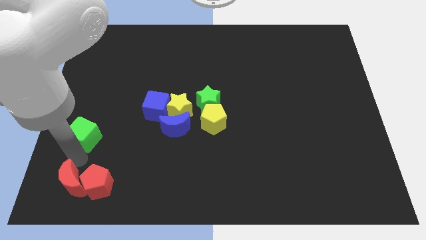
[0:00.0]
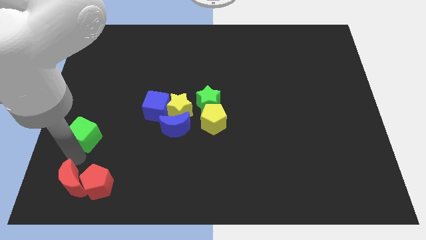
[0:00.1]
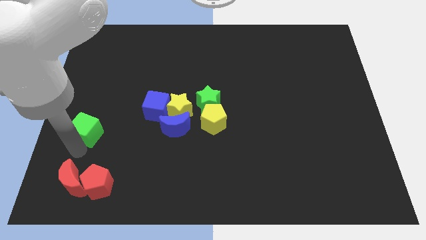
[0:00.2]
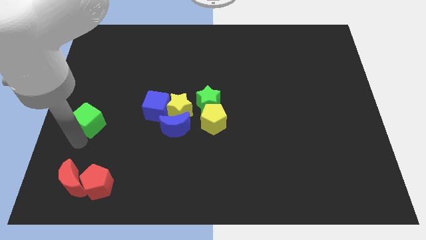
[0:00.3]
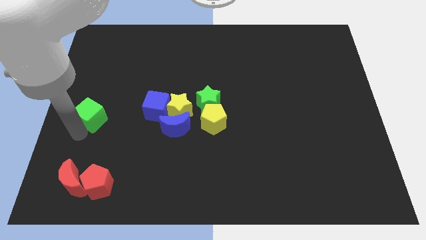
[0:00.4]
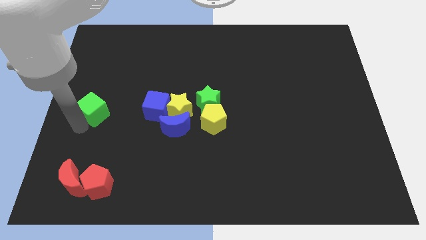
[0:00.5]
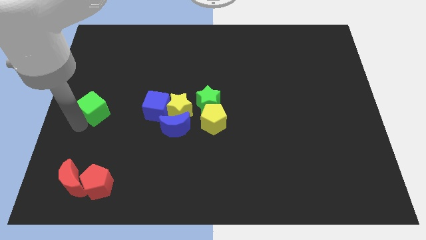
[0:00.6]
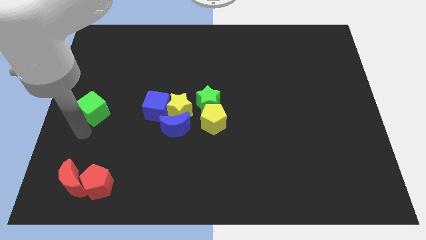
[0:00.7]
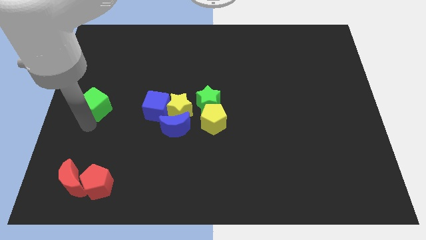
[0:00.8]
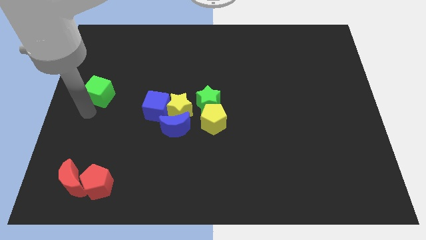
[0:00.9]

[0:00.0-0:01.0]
push the green cube left center of the board

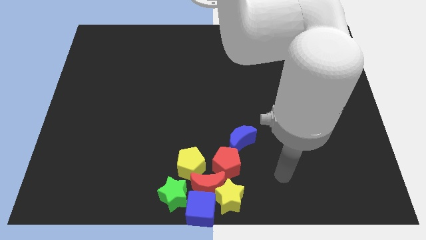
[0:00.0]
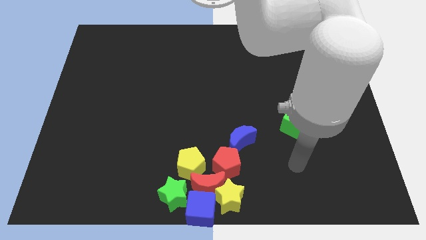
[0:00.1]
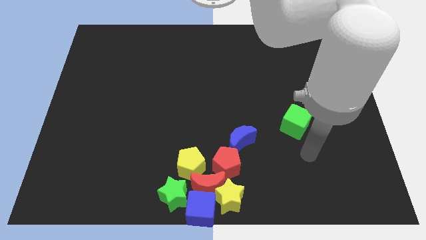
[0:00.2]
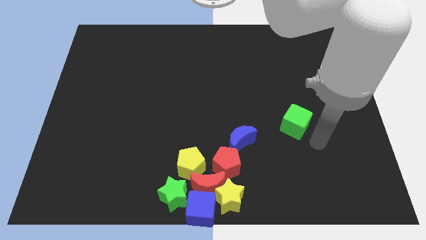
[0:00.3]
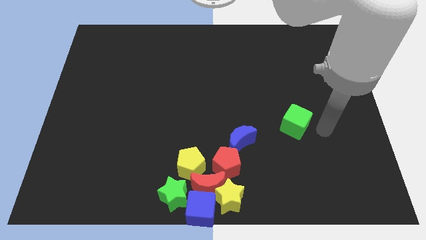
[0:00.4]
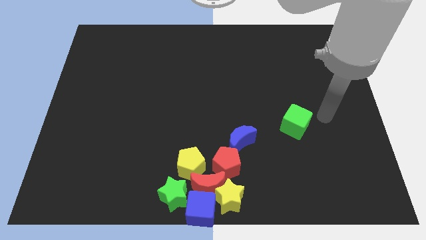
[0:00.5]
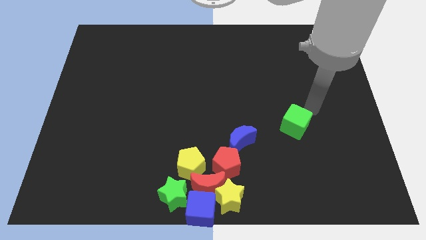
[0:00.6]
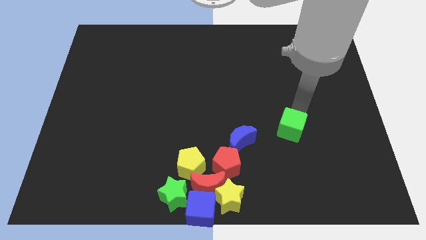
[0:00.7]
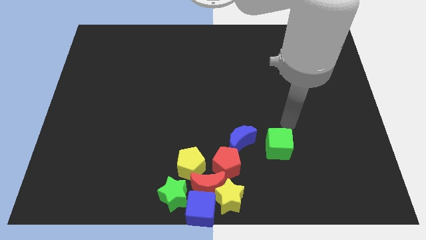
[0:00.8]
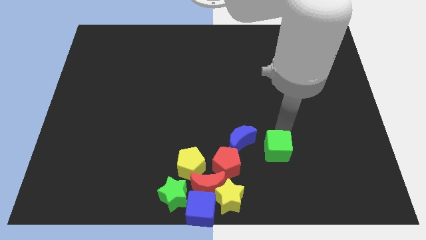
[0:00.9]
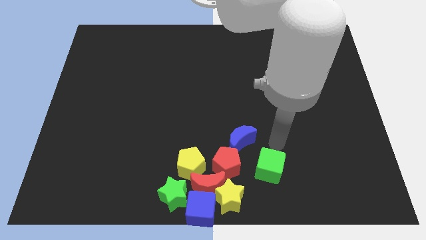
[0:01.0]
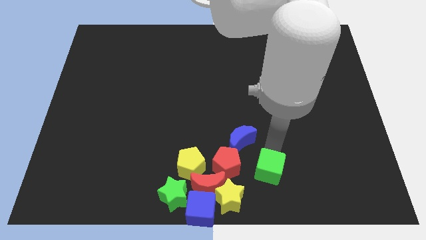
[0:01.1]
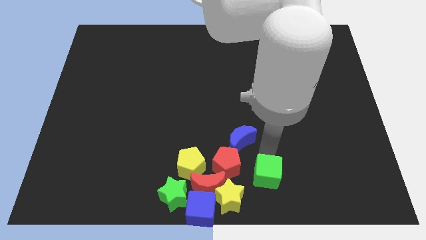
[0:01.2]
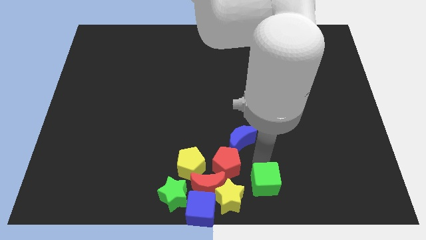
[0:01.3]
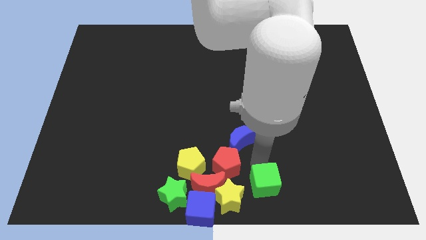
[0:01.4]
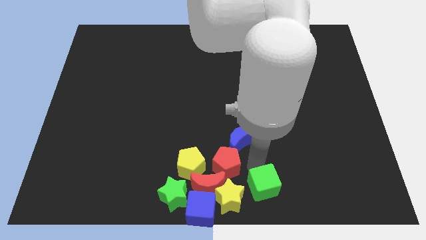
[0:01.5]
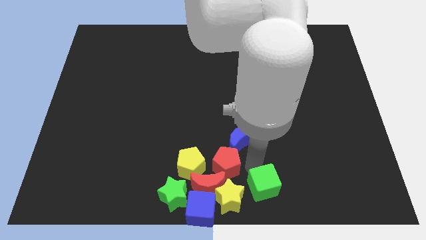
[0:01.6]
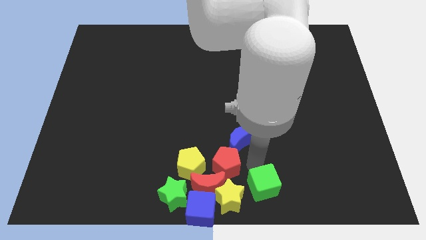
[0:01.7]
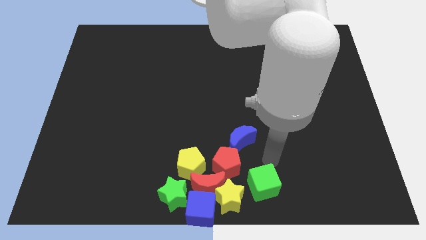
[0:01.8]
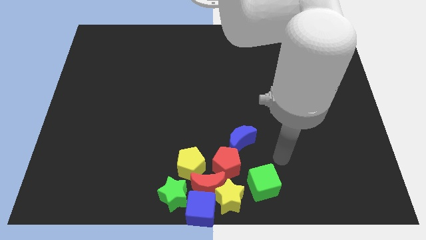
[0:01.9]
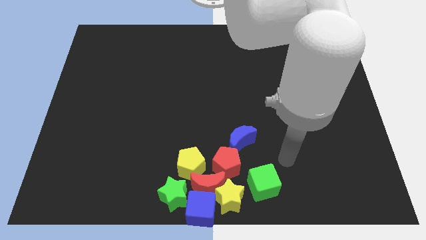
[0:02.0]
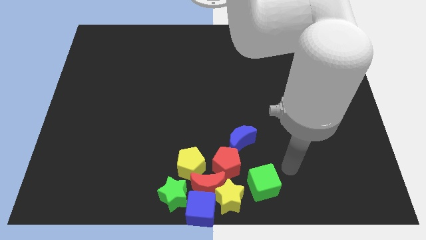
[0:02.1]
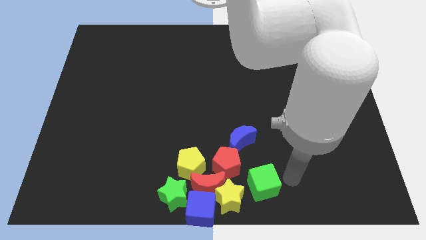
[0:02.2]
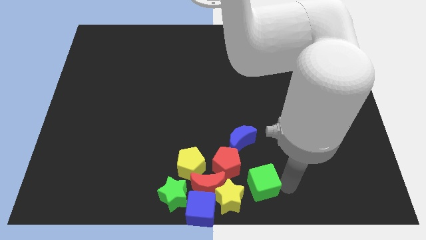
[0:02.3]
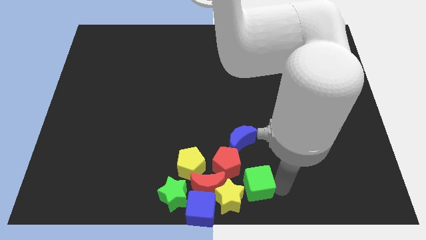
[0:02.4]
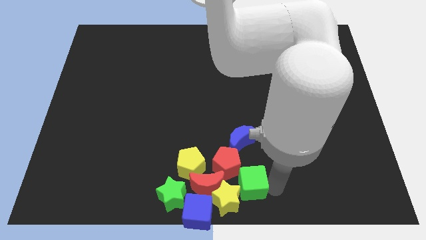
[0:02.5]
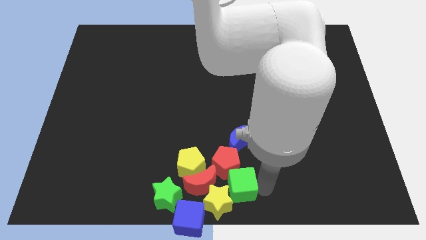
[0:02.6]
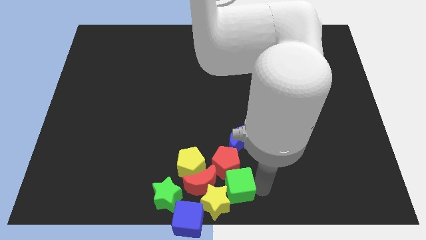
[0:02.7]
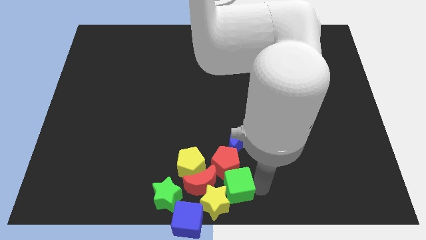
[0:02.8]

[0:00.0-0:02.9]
place green cube towards the group of blocks

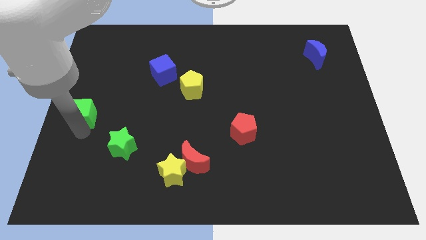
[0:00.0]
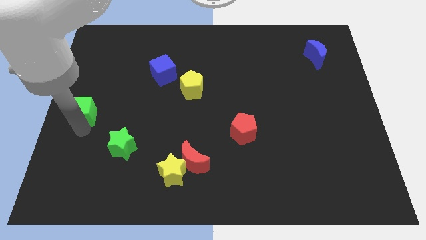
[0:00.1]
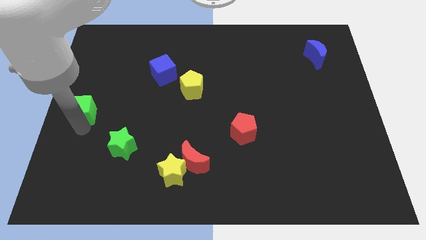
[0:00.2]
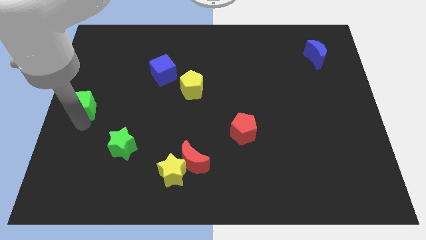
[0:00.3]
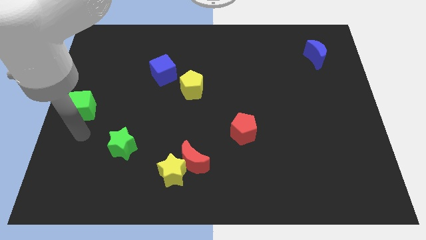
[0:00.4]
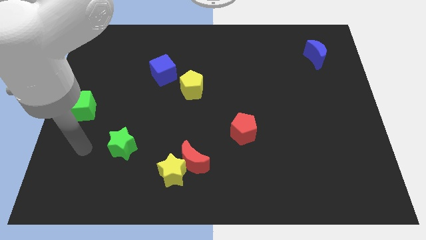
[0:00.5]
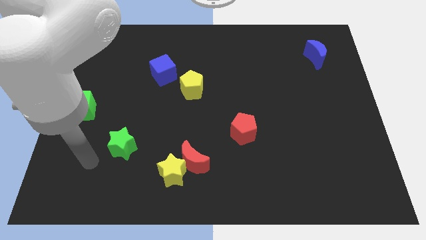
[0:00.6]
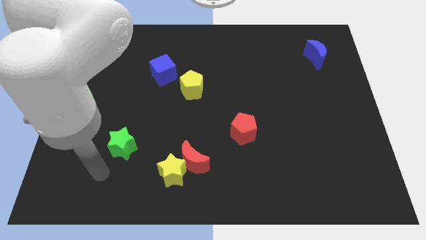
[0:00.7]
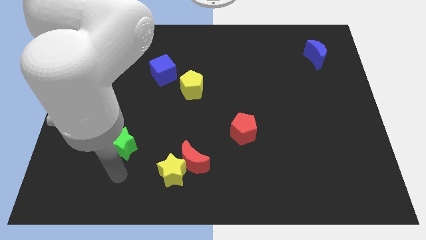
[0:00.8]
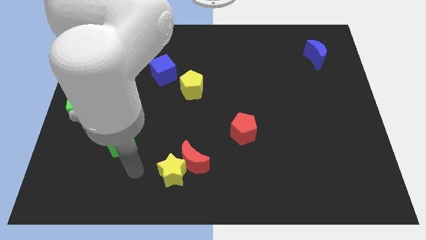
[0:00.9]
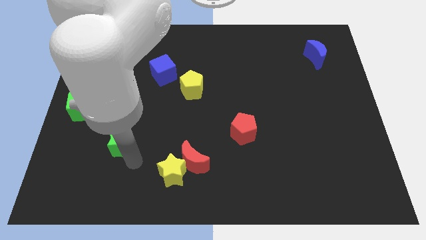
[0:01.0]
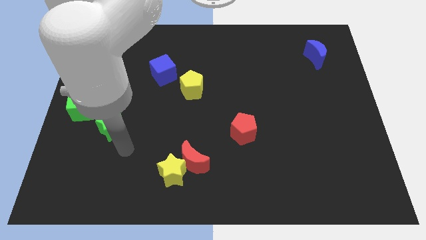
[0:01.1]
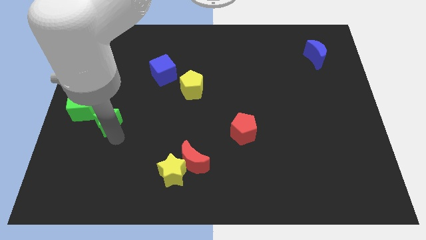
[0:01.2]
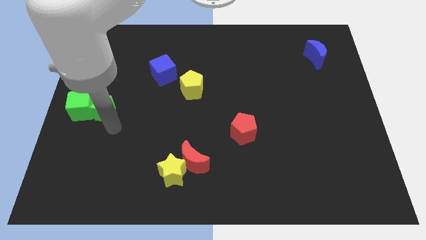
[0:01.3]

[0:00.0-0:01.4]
push the green star close to the right of the green cube

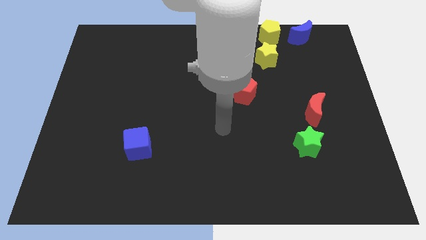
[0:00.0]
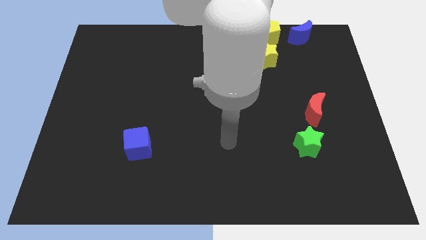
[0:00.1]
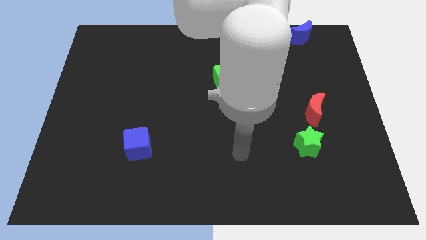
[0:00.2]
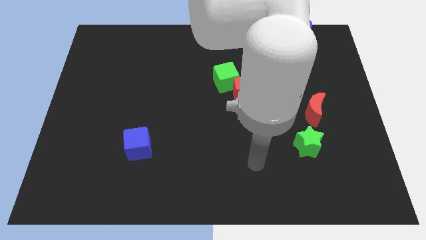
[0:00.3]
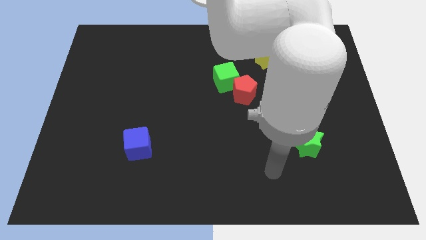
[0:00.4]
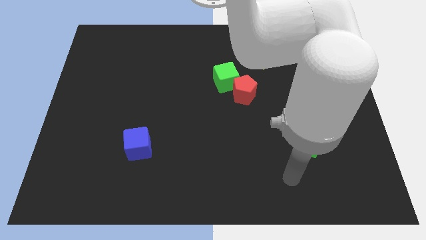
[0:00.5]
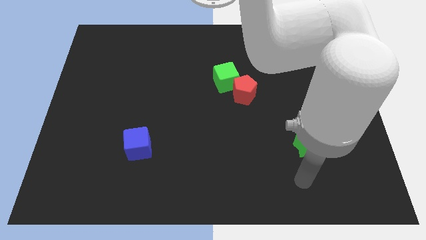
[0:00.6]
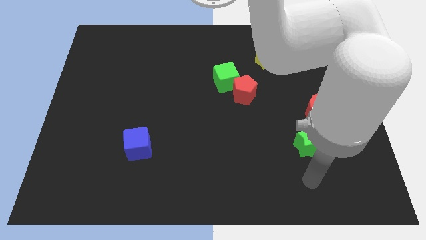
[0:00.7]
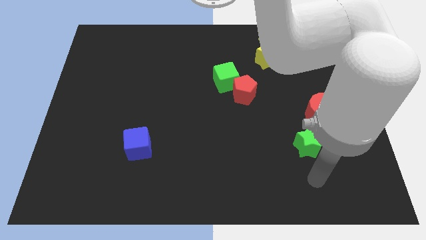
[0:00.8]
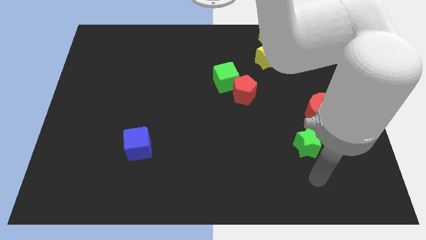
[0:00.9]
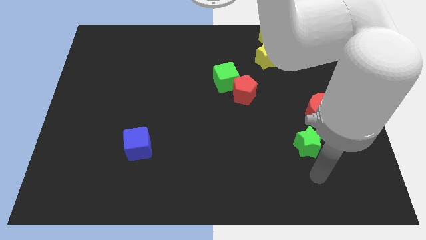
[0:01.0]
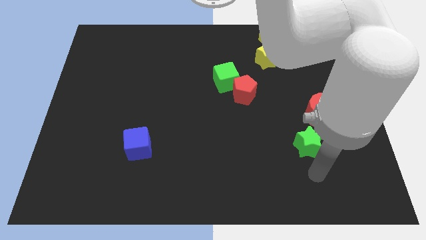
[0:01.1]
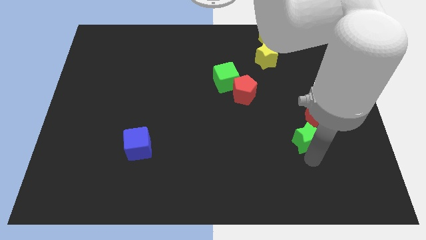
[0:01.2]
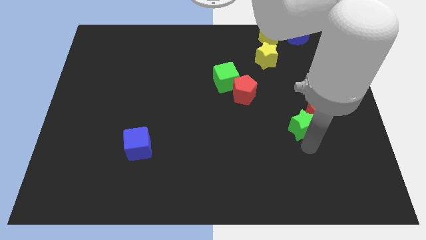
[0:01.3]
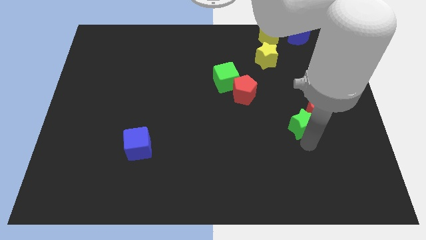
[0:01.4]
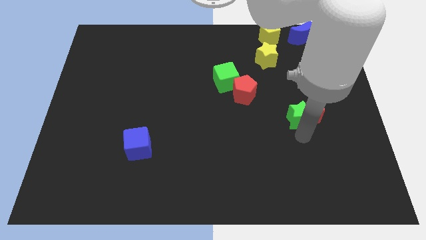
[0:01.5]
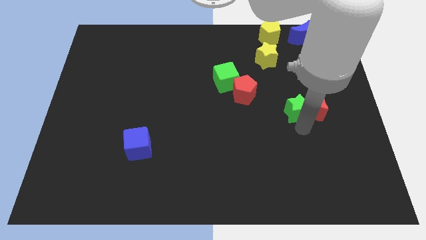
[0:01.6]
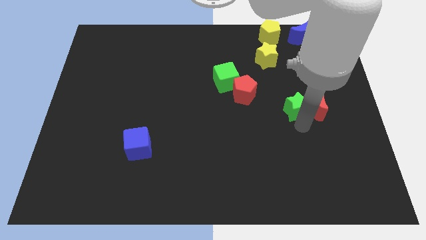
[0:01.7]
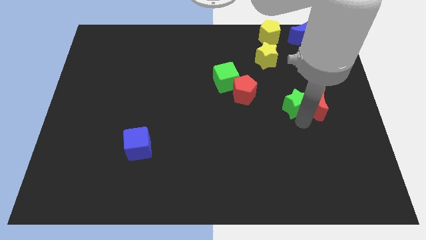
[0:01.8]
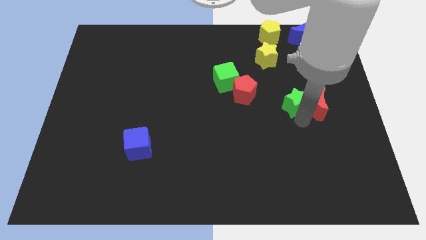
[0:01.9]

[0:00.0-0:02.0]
slide the green star to the left of red moon

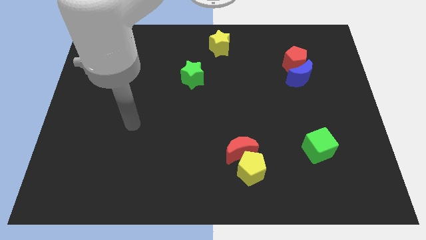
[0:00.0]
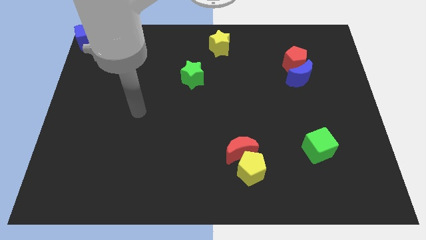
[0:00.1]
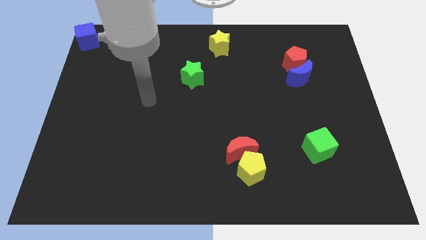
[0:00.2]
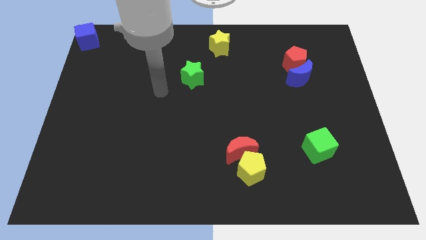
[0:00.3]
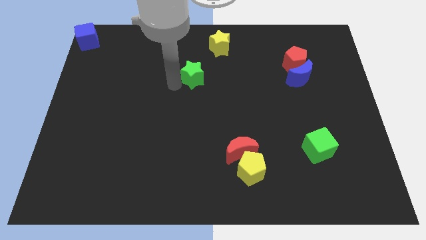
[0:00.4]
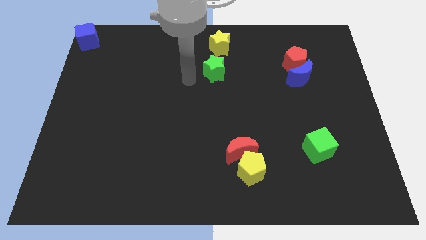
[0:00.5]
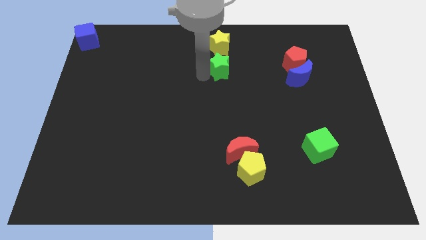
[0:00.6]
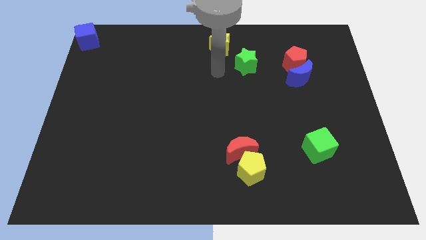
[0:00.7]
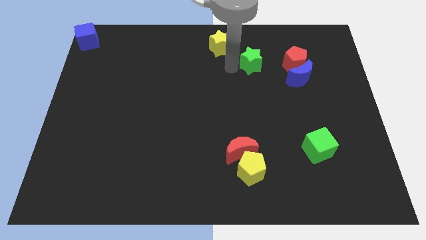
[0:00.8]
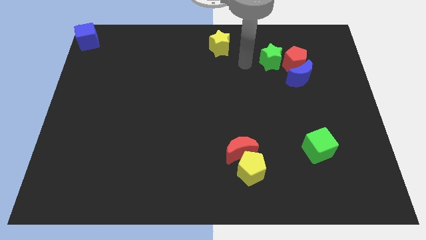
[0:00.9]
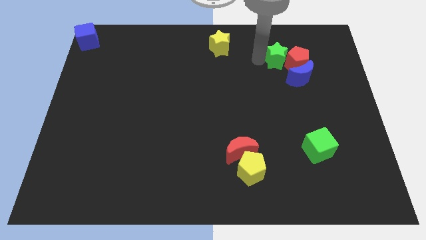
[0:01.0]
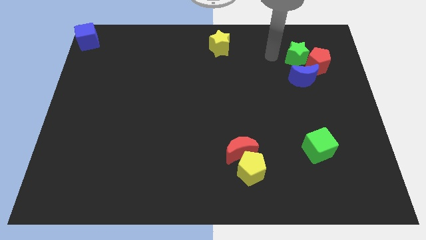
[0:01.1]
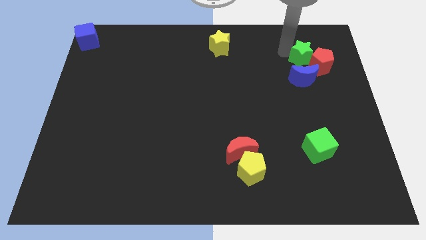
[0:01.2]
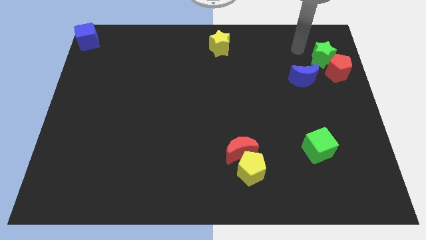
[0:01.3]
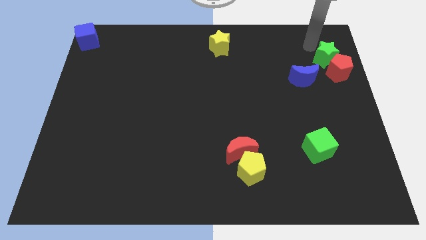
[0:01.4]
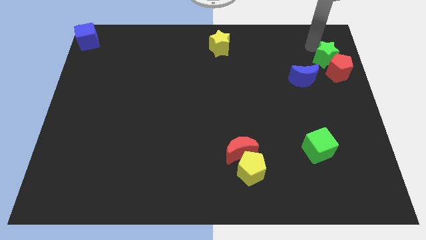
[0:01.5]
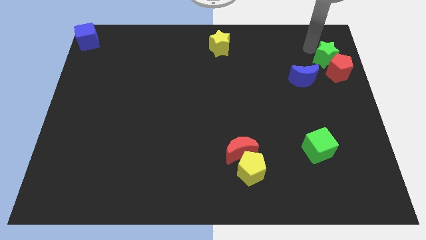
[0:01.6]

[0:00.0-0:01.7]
push the green star into the red pentagon

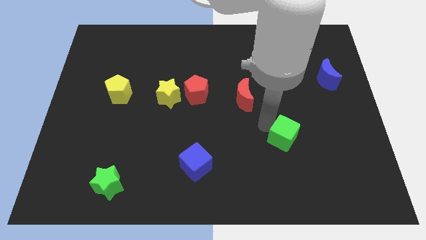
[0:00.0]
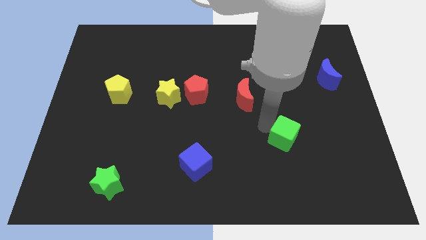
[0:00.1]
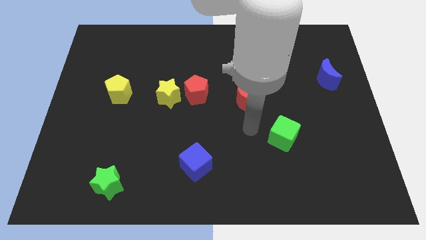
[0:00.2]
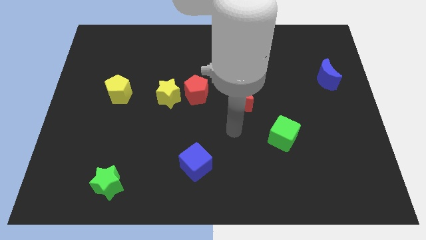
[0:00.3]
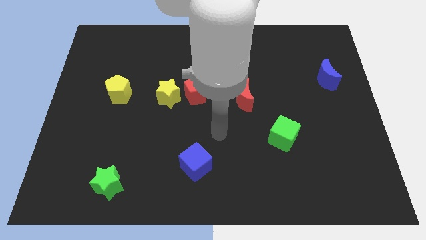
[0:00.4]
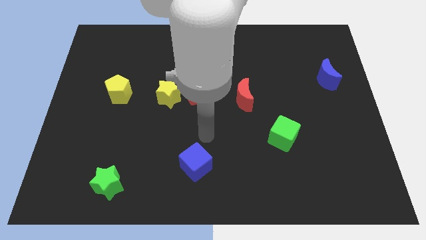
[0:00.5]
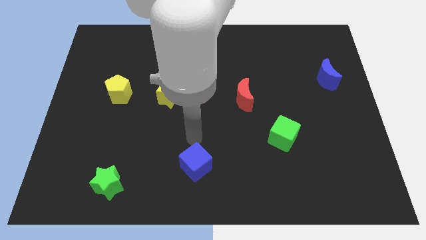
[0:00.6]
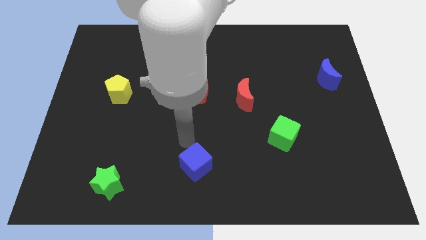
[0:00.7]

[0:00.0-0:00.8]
point your arm above the blue cube
